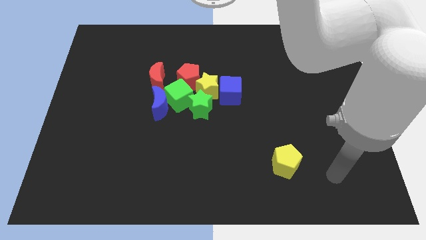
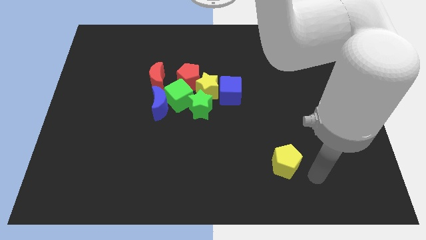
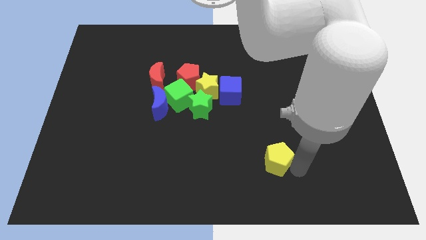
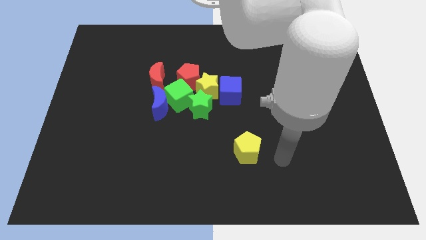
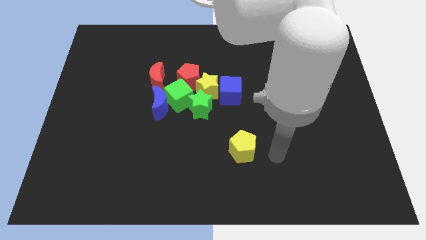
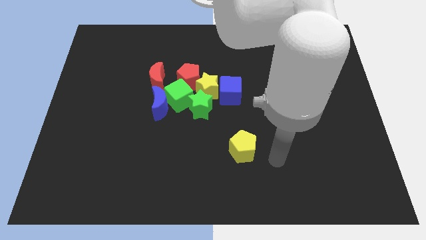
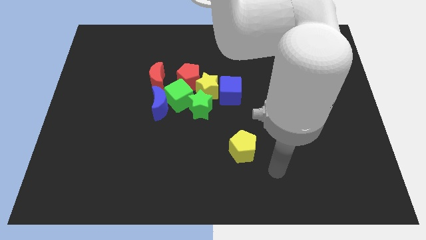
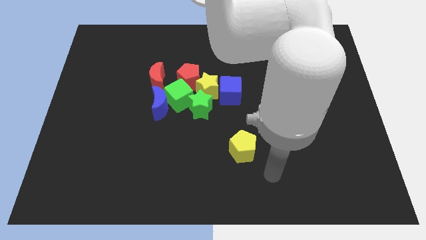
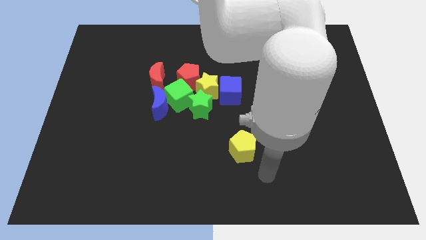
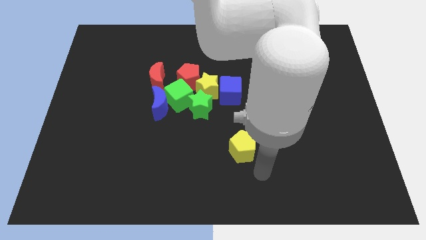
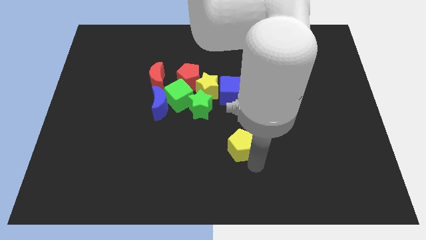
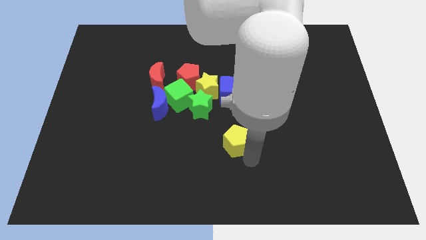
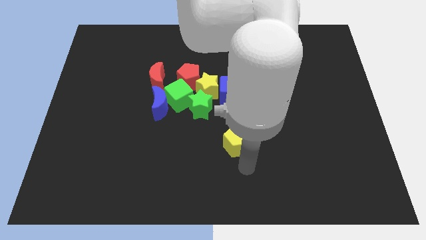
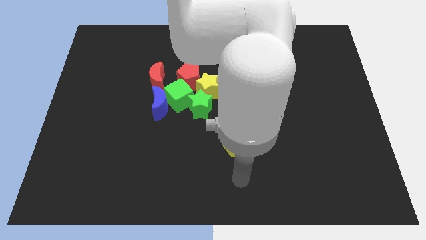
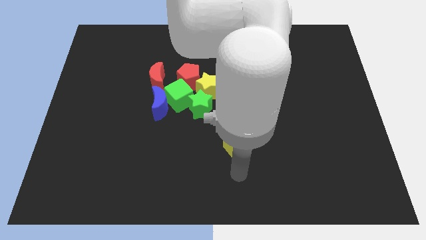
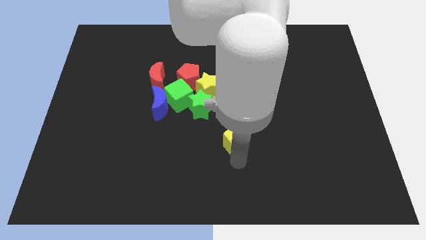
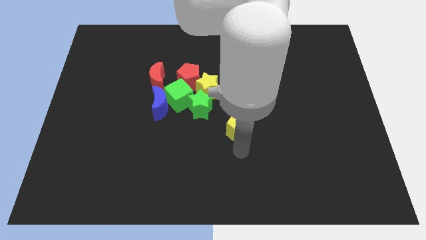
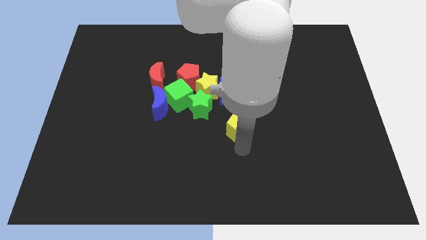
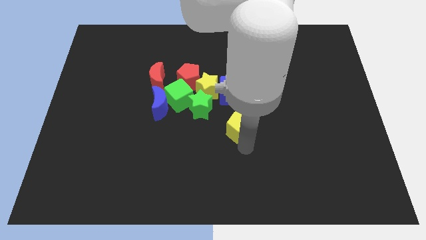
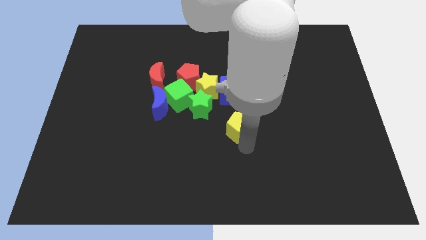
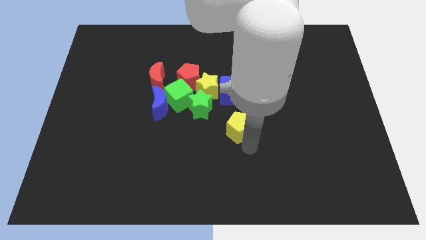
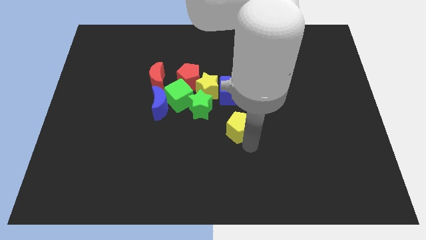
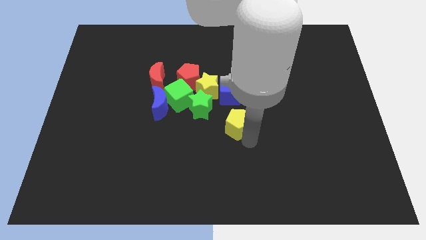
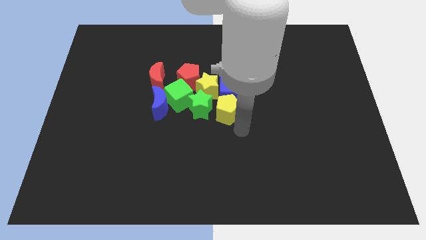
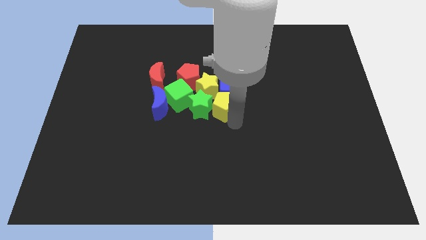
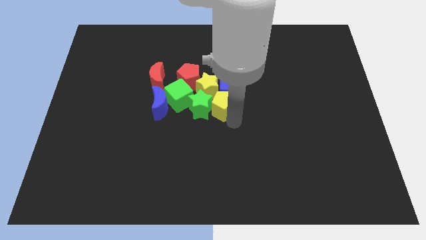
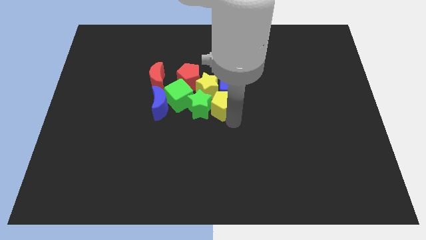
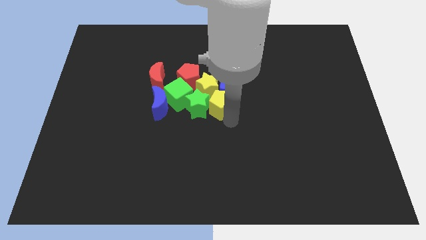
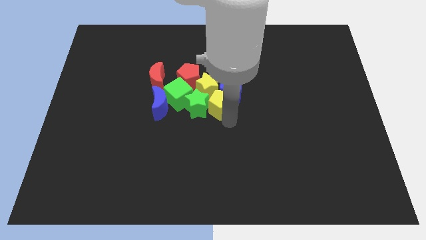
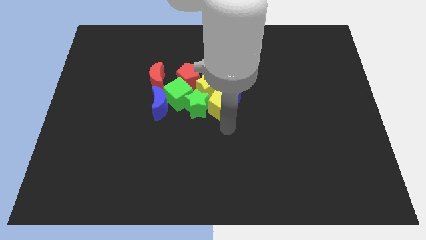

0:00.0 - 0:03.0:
put the yellow pentagon to the right of the green star

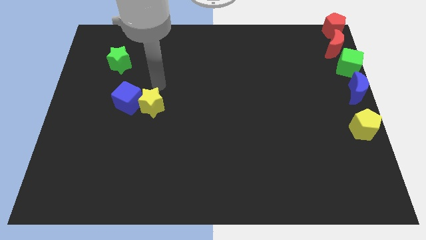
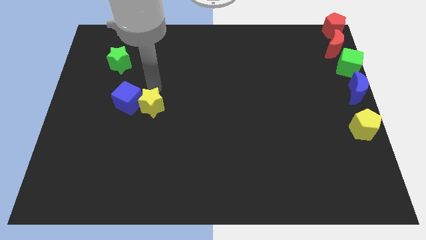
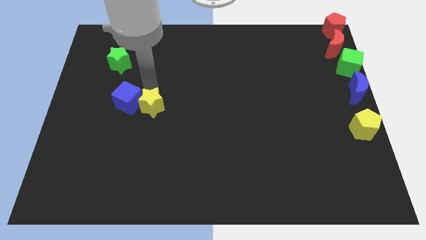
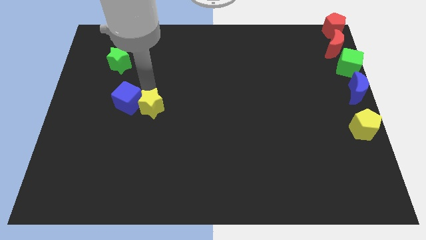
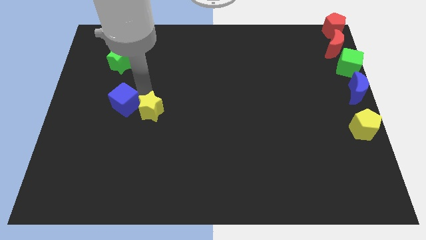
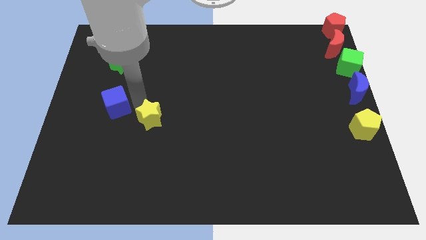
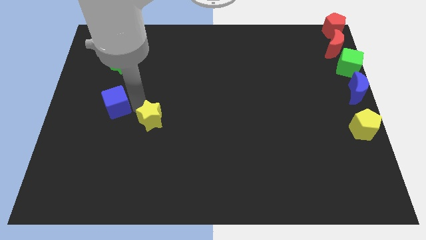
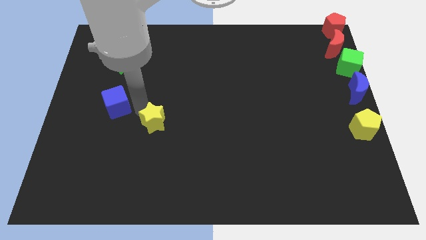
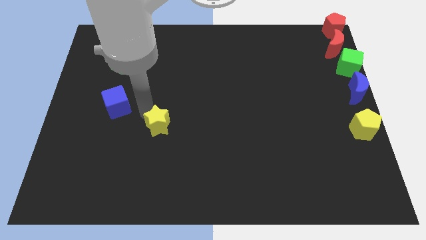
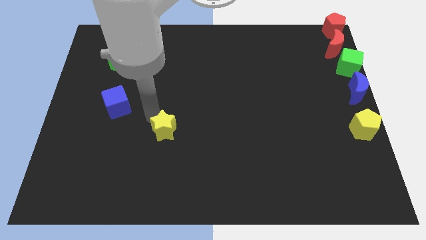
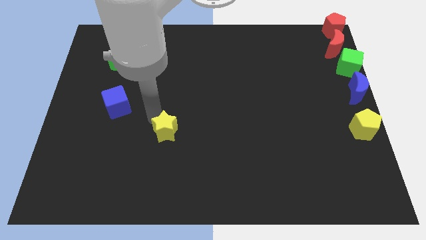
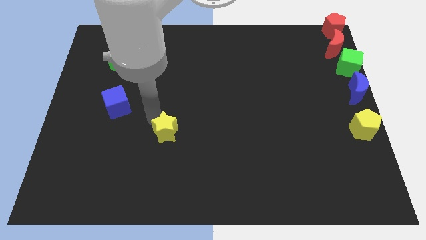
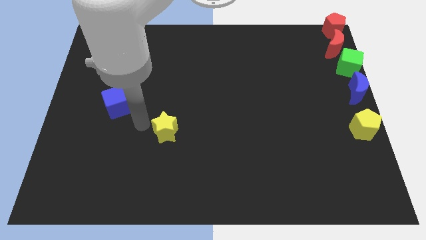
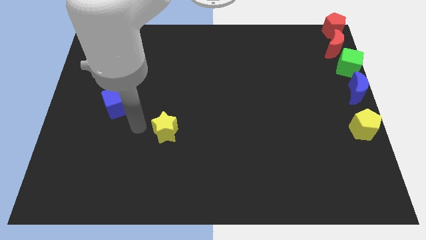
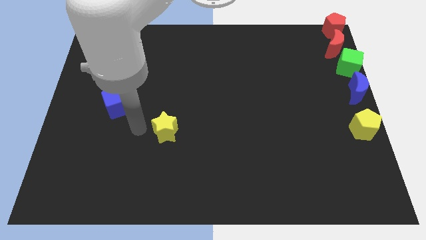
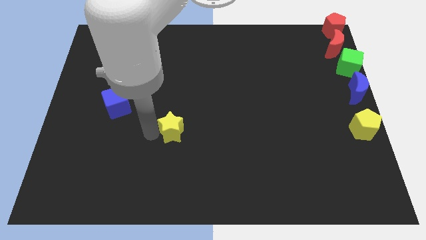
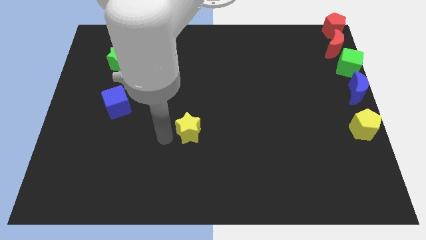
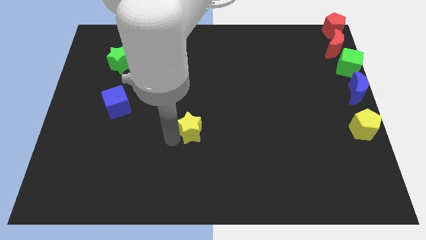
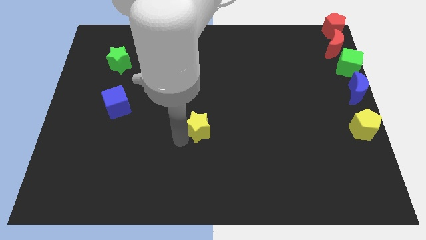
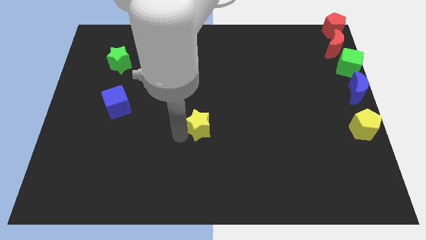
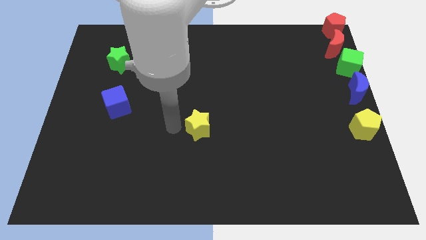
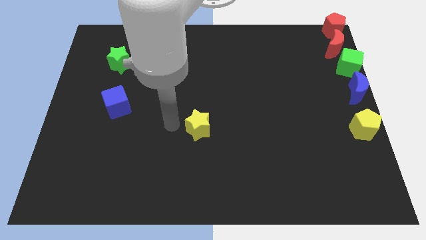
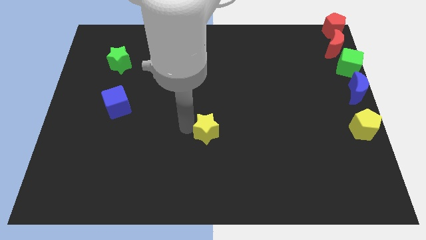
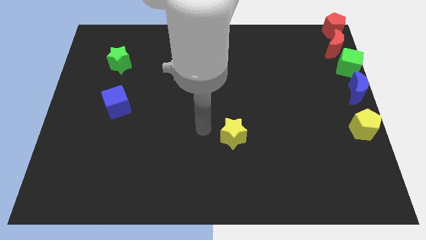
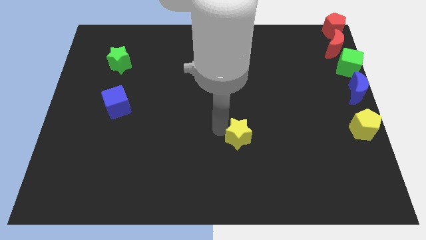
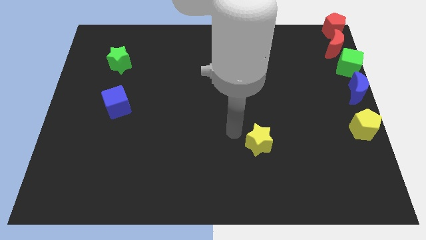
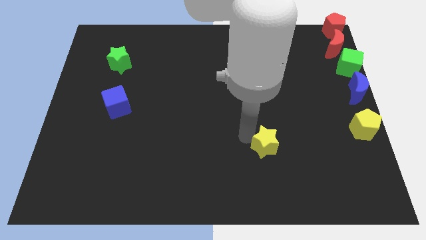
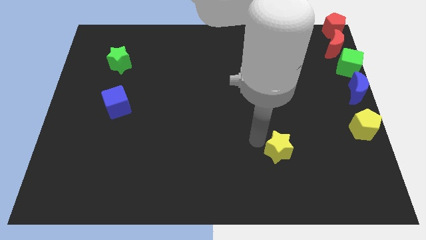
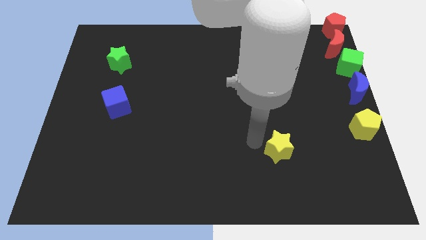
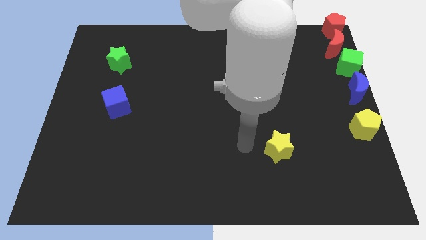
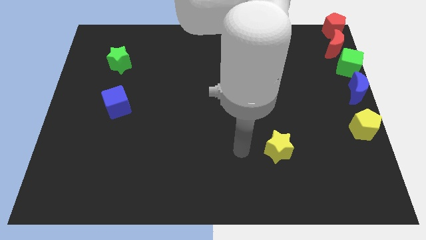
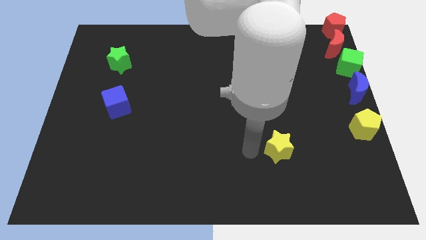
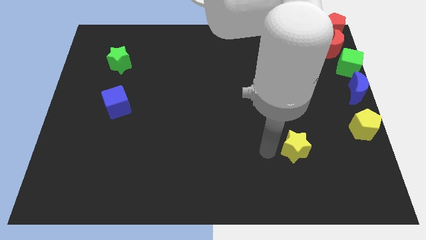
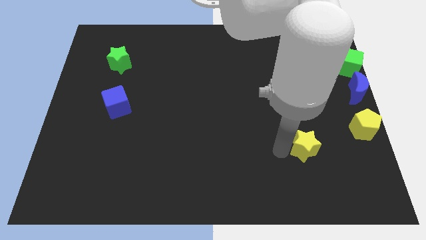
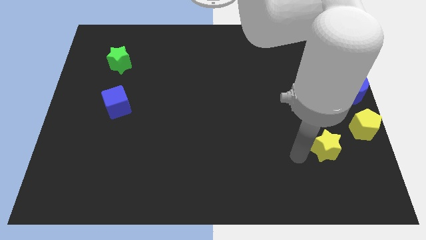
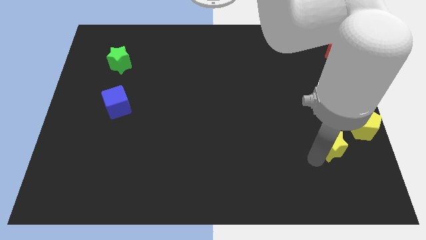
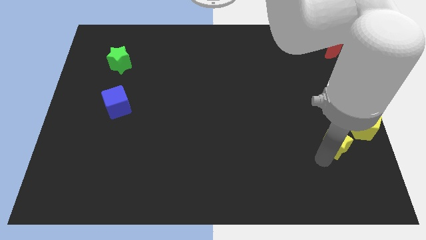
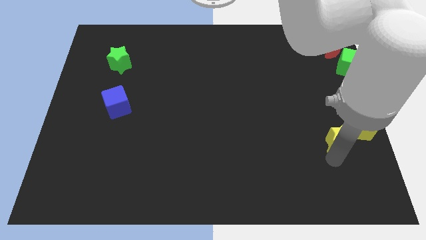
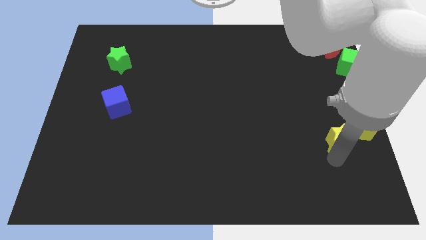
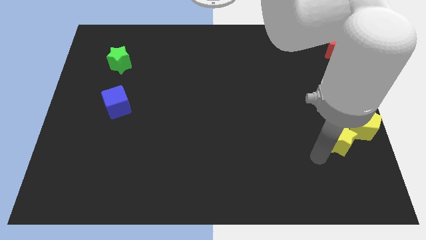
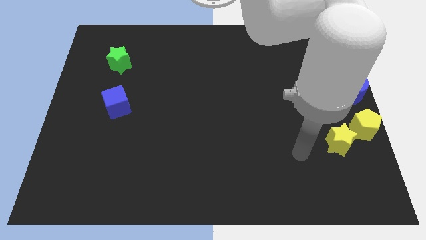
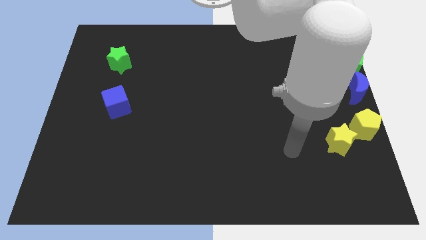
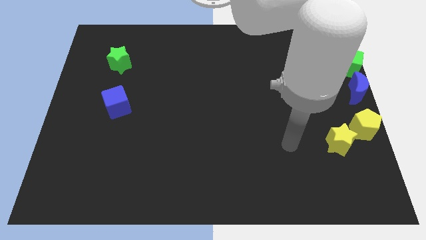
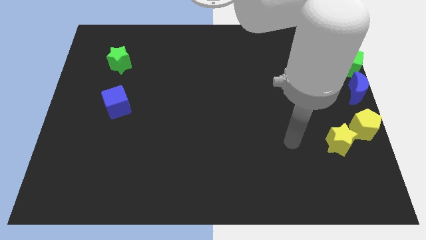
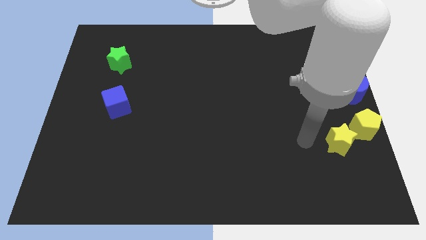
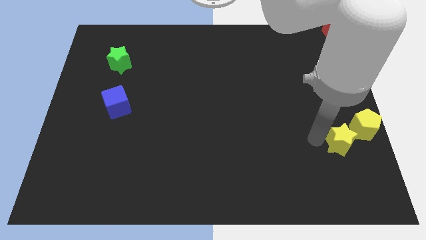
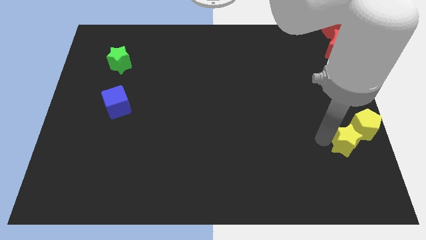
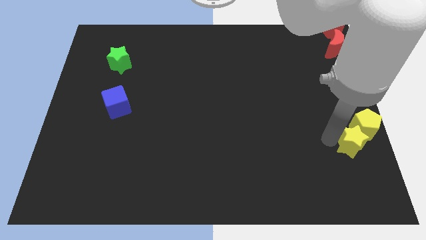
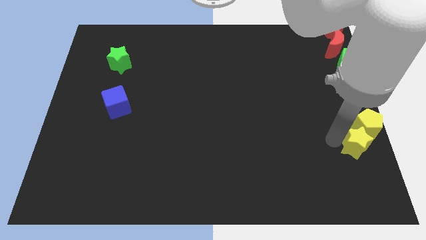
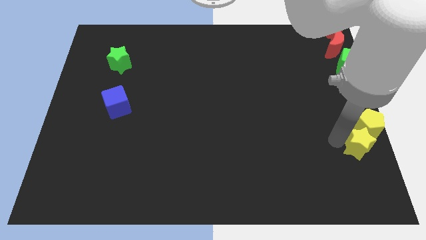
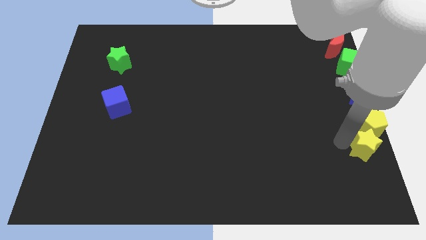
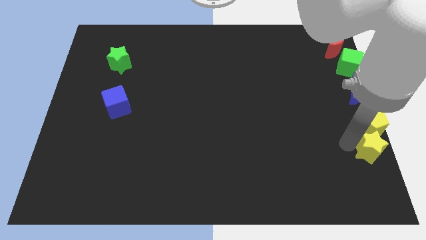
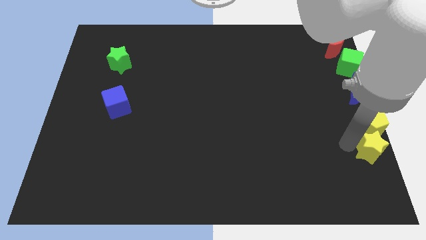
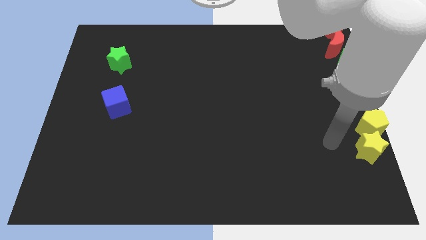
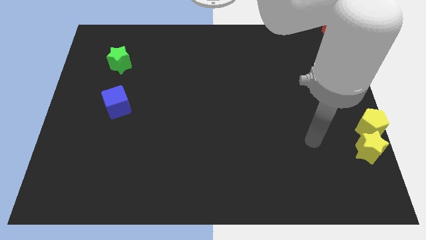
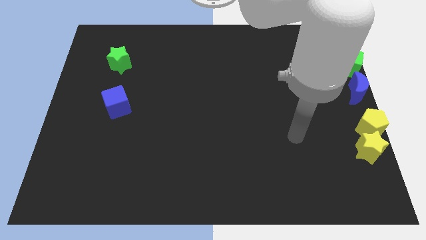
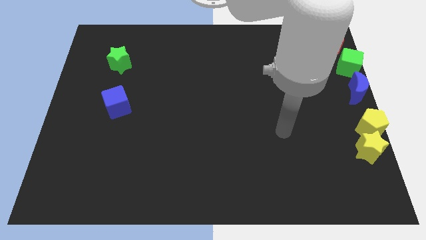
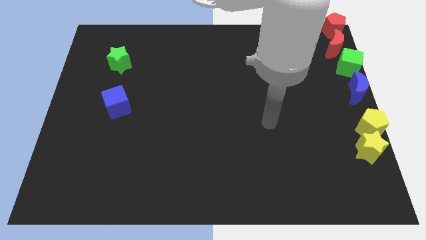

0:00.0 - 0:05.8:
push the yellow star into the yellow pentagon

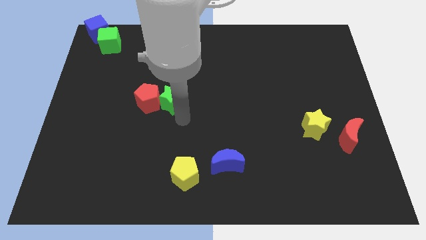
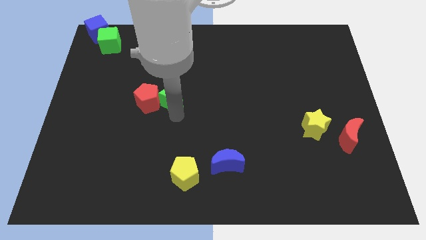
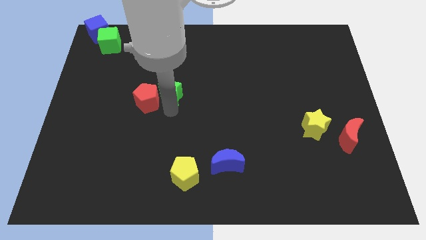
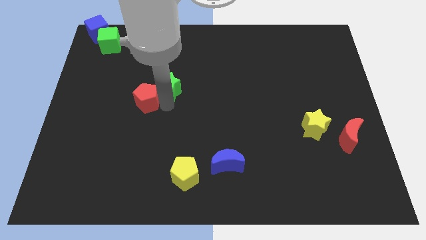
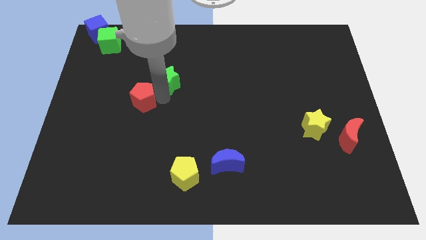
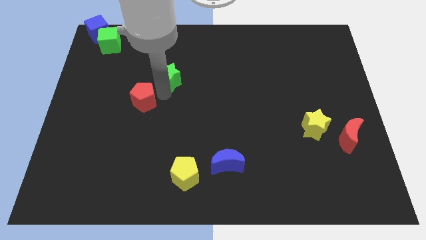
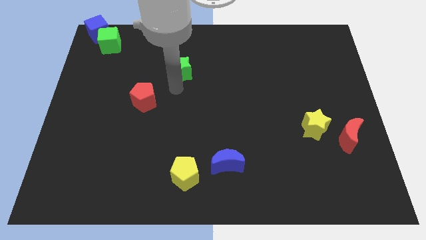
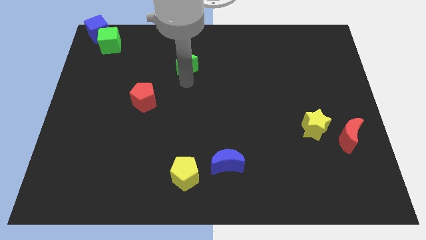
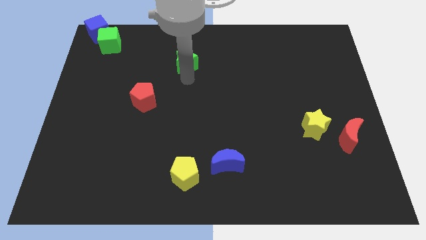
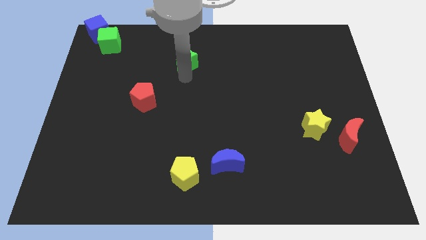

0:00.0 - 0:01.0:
separate the green star and red pentagon
